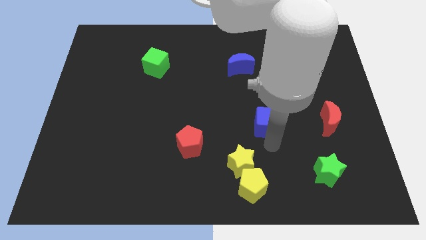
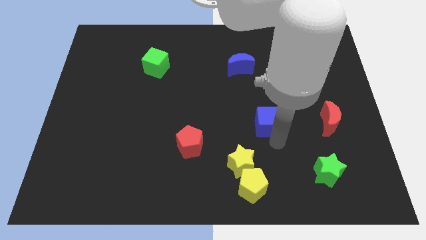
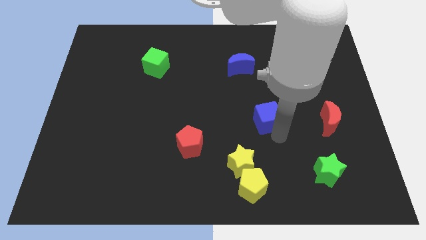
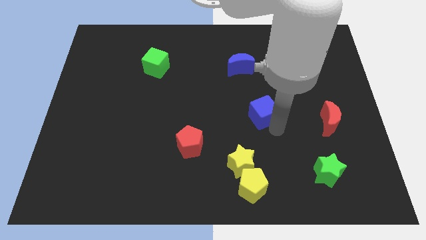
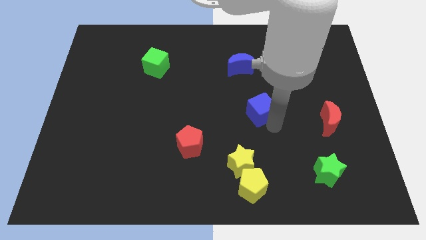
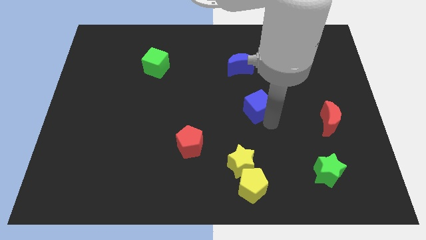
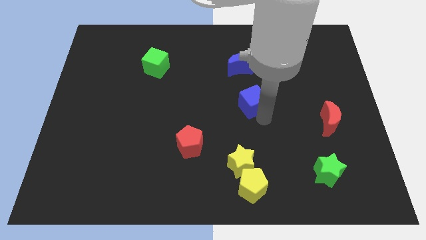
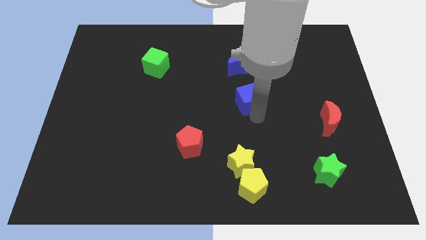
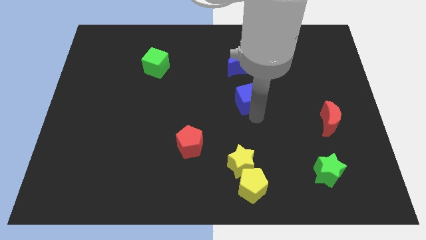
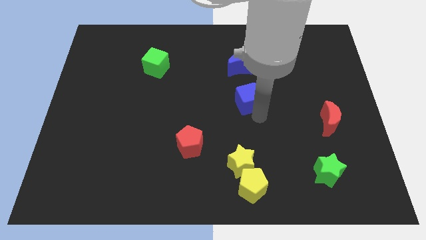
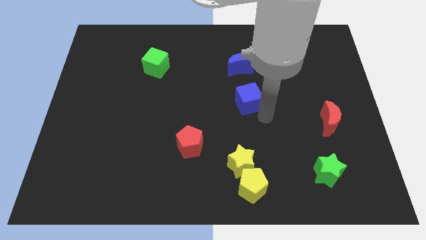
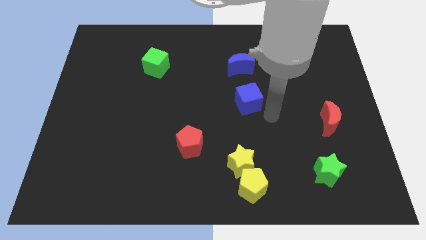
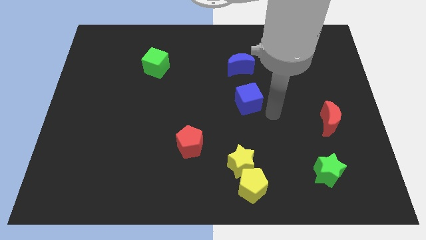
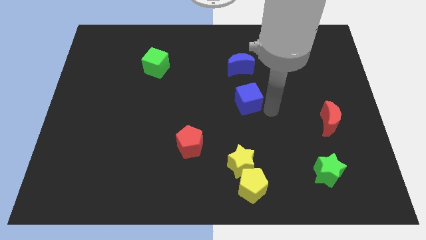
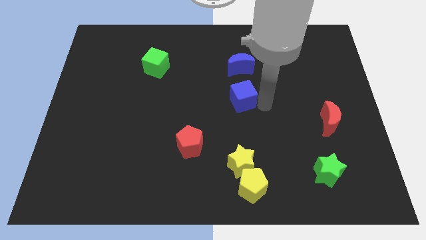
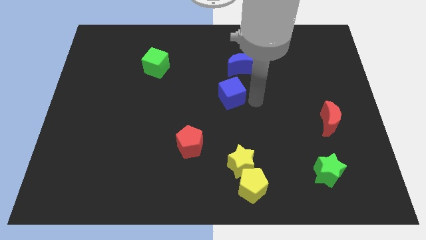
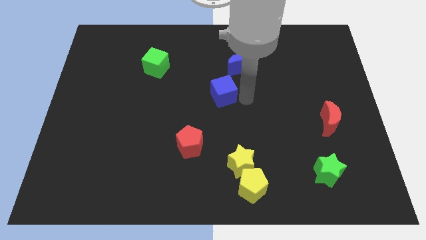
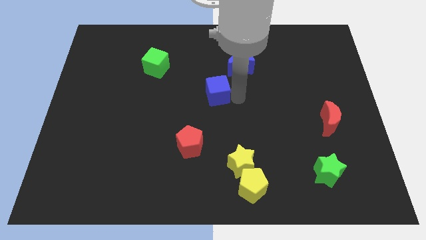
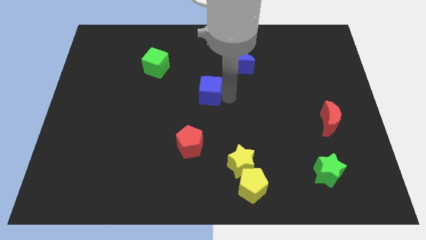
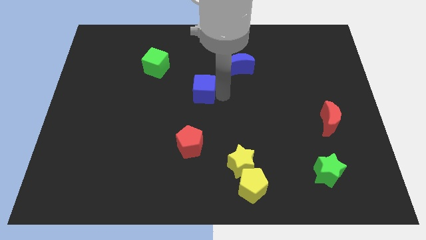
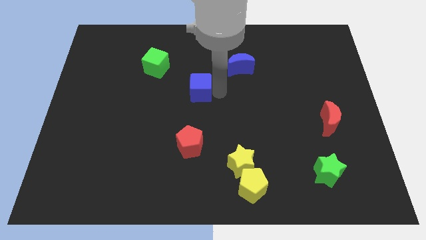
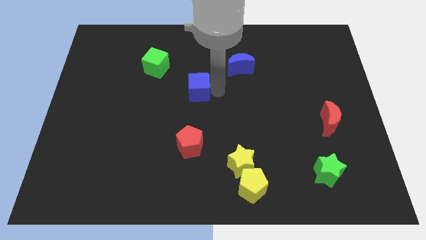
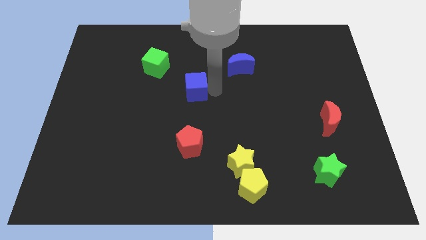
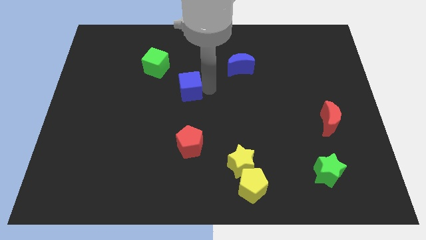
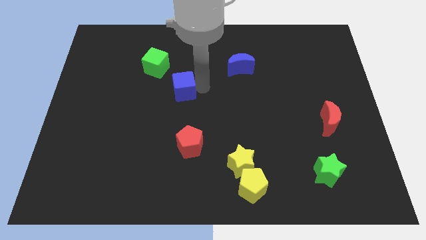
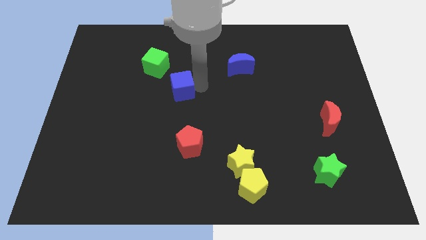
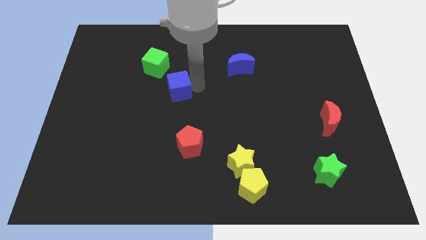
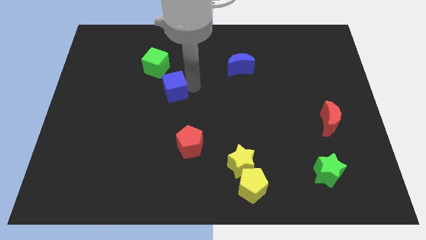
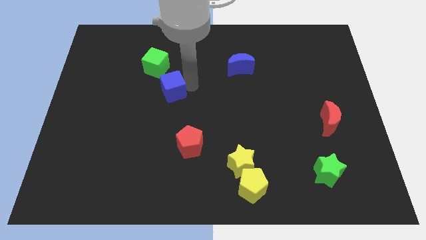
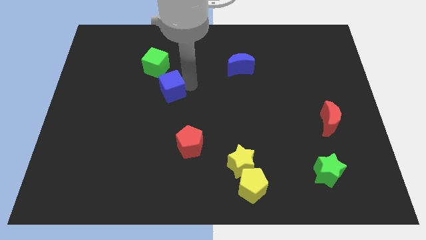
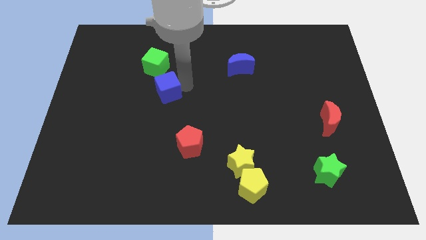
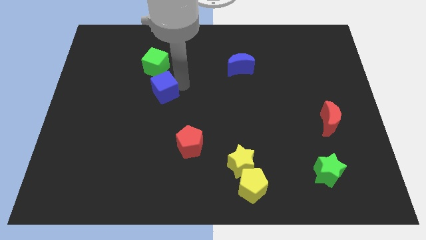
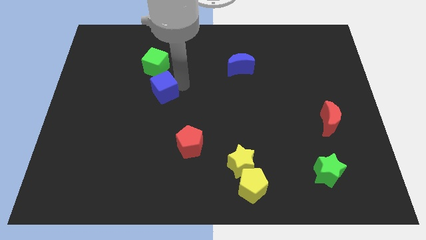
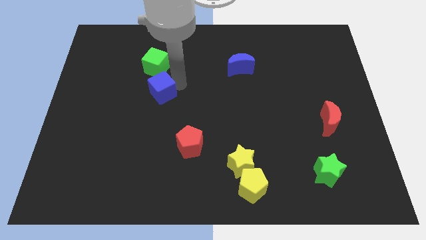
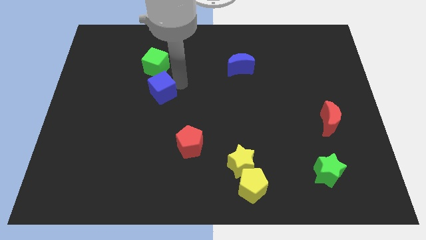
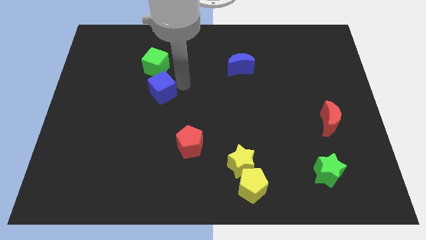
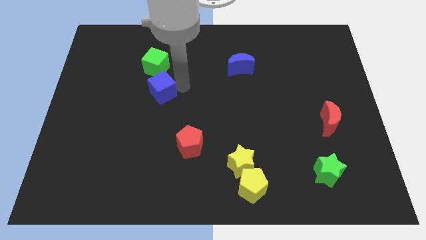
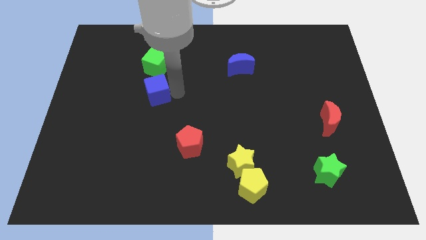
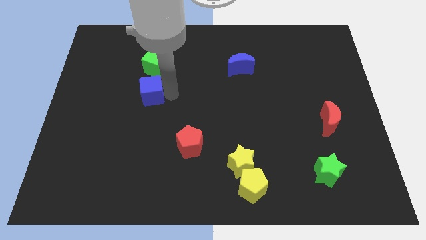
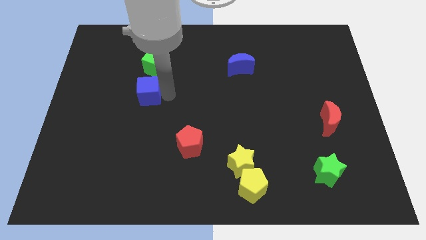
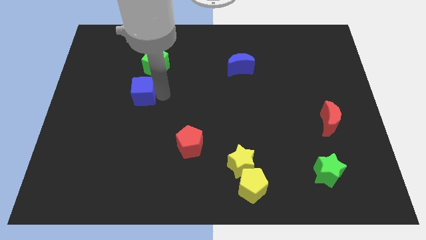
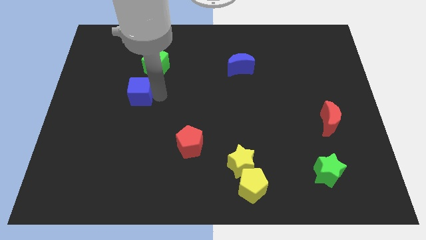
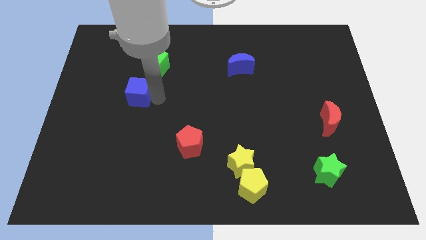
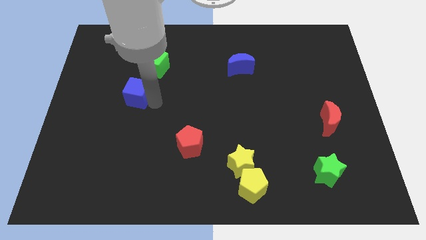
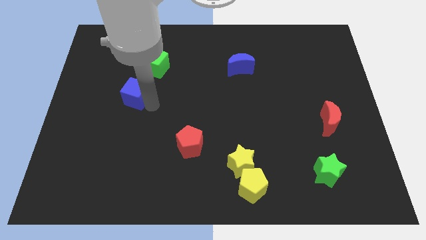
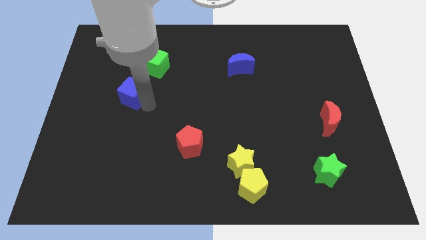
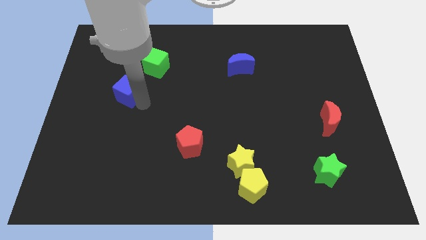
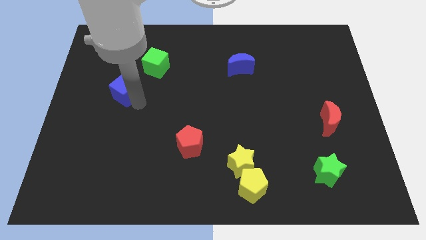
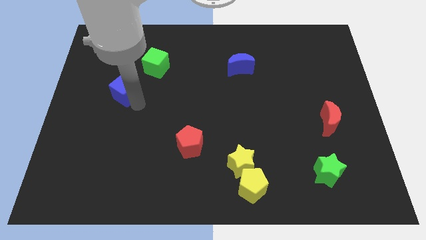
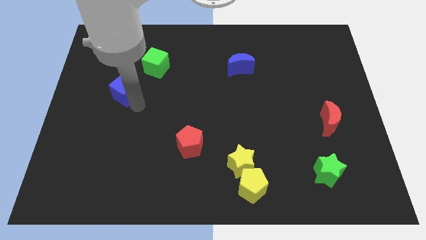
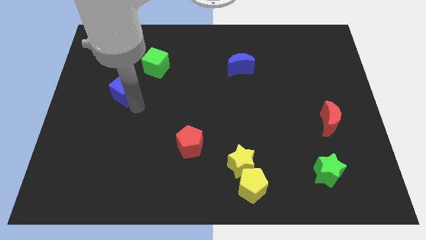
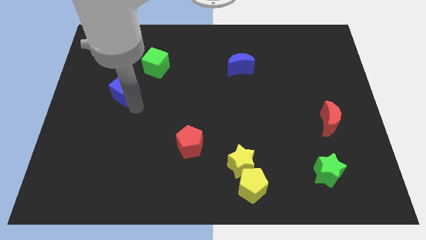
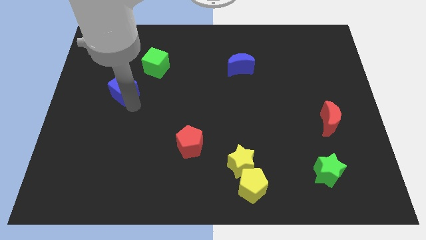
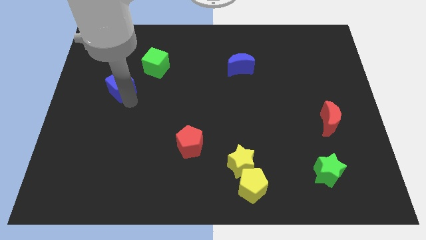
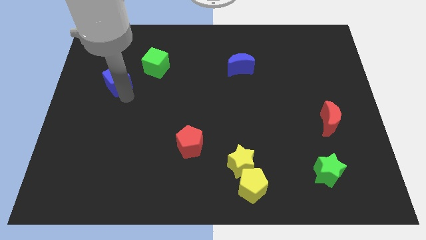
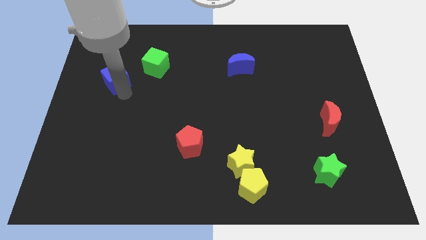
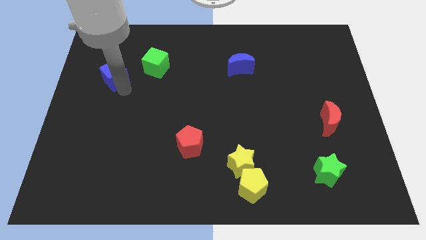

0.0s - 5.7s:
push the blue cube to the left side of the board

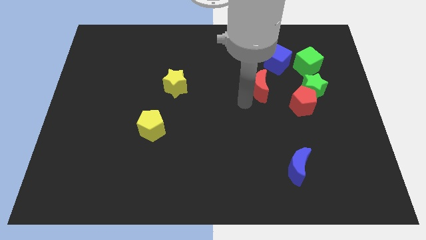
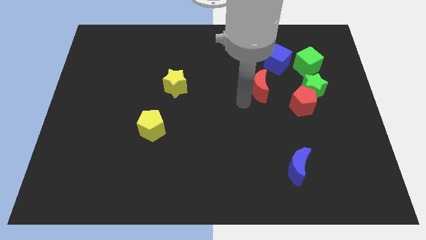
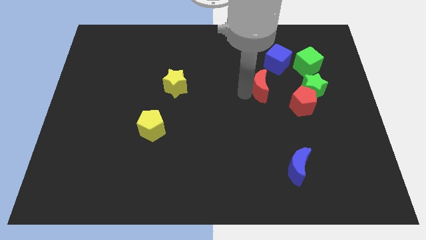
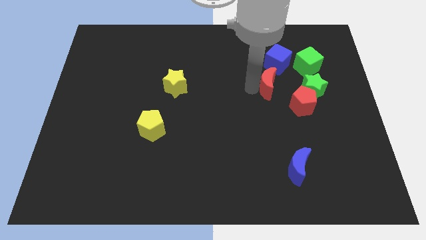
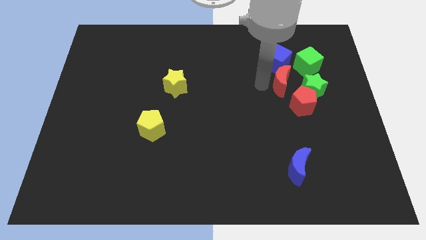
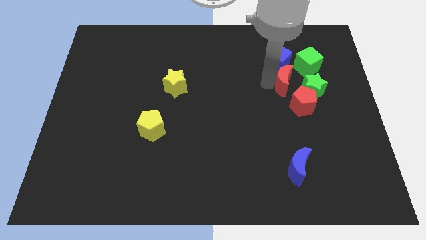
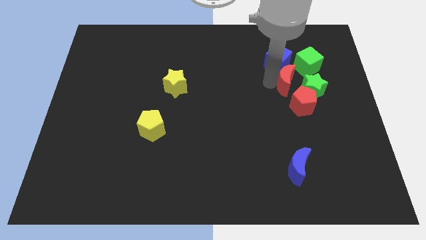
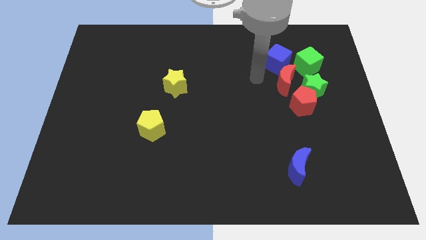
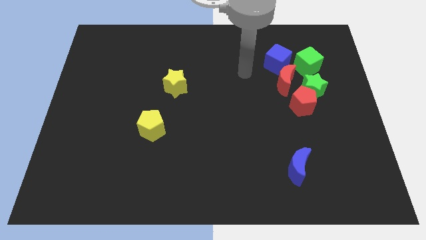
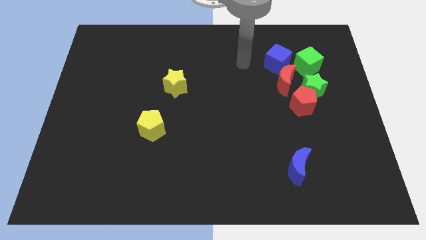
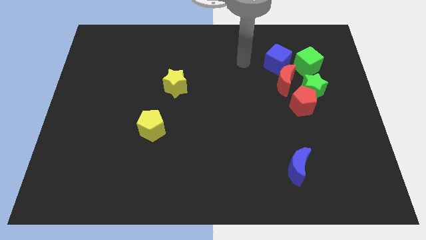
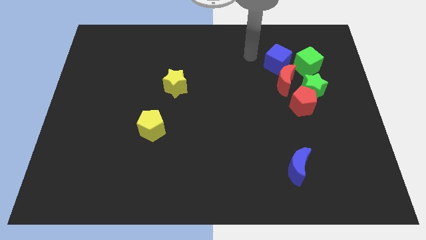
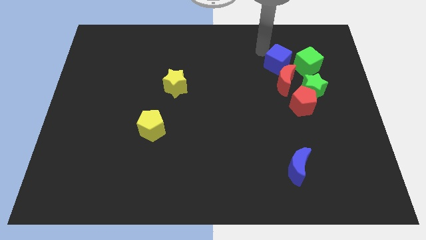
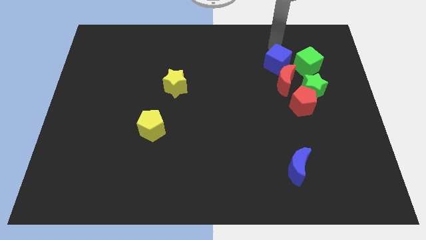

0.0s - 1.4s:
place red moon in between the red pentagon and blue cube

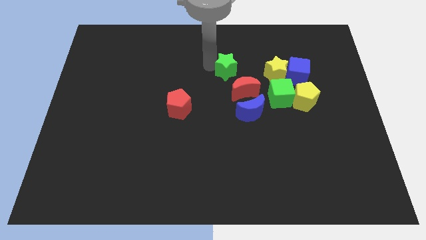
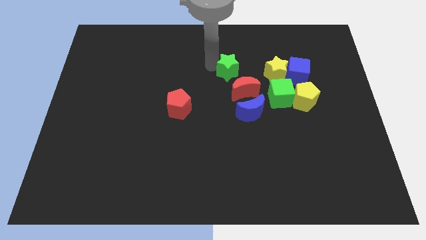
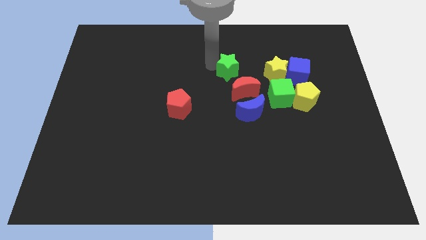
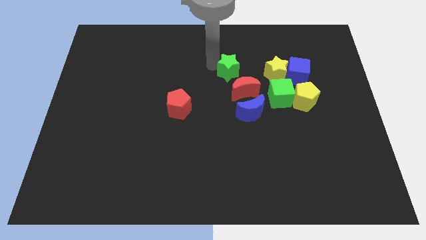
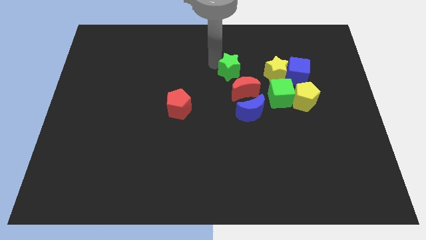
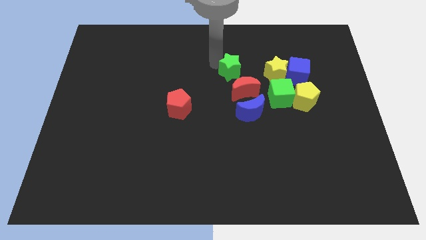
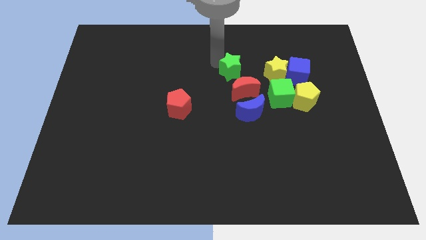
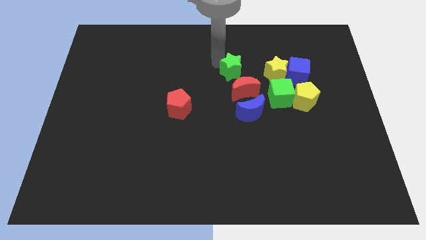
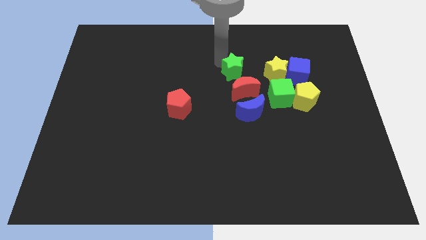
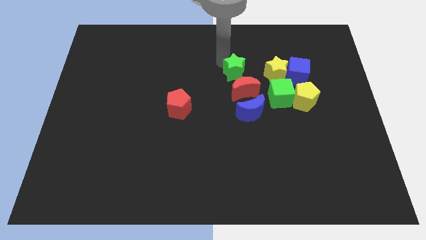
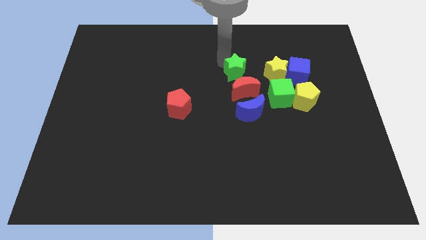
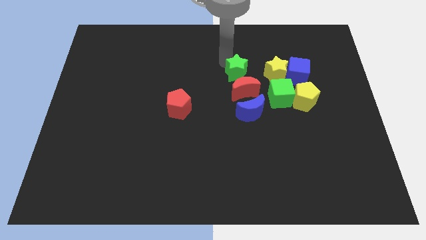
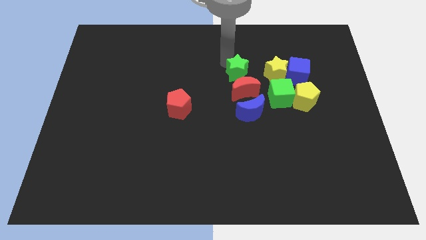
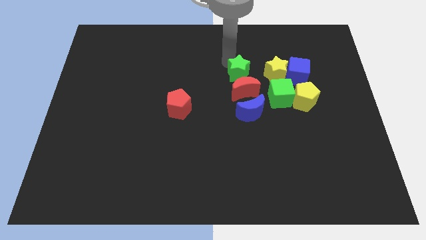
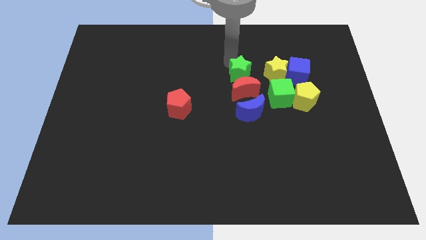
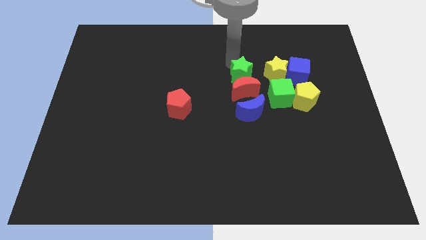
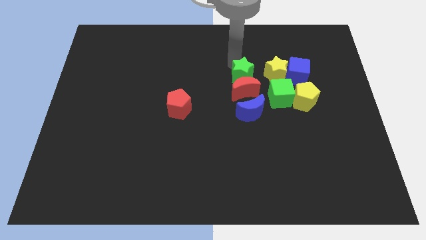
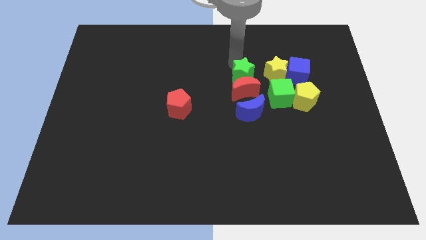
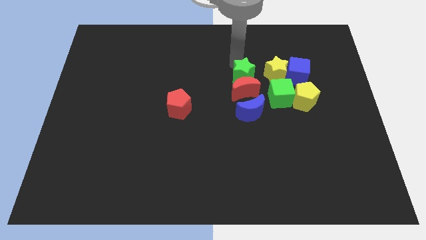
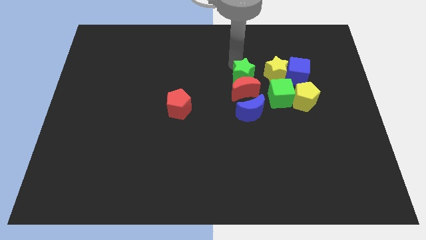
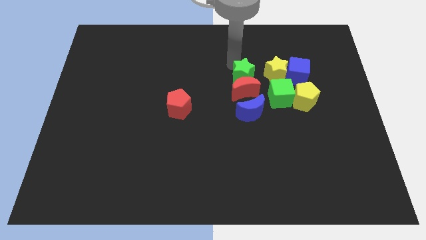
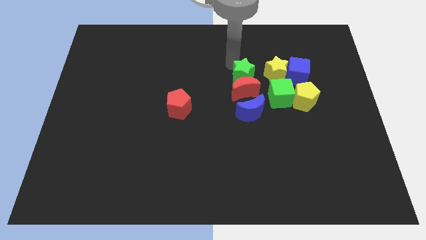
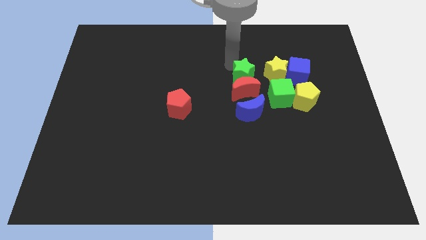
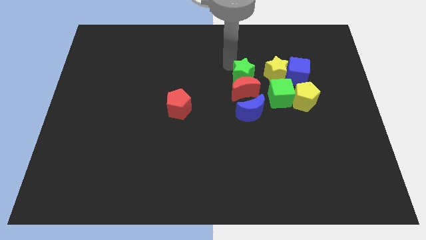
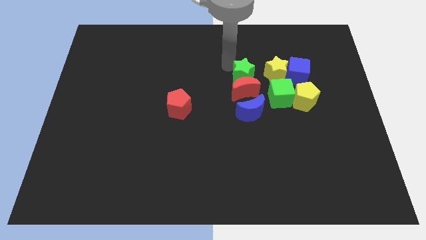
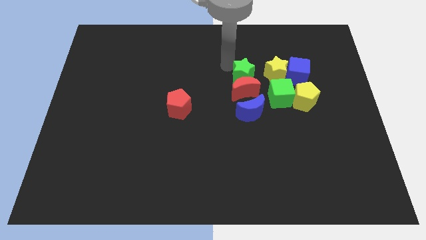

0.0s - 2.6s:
place the green star above the red crescent
